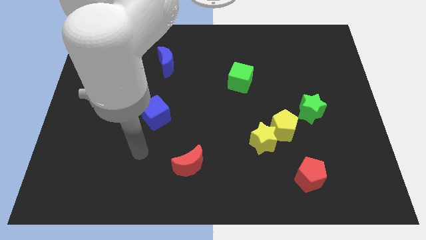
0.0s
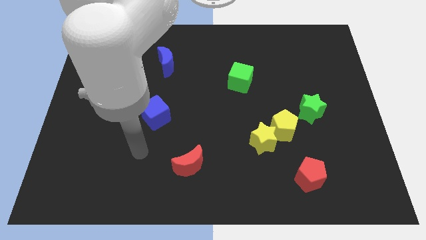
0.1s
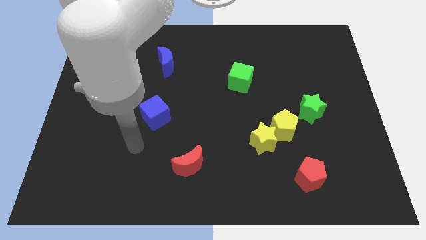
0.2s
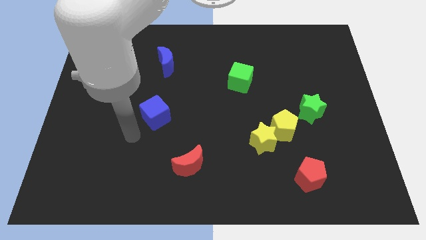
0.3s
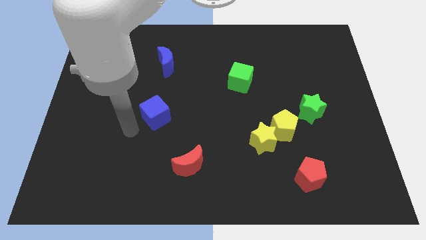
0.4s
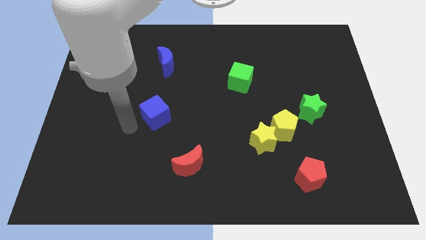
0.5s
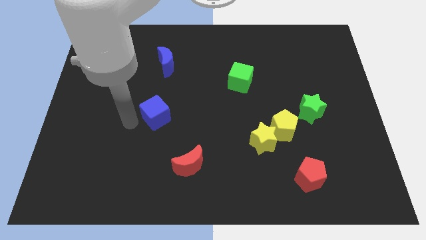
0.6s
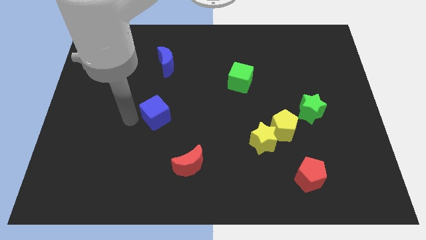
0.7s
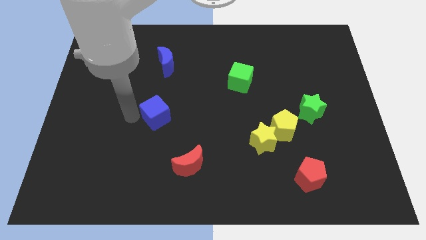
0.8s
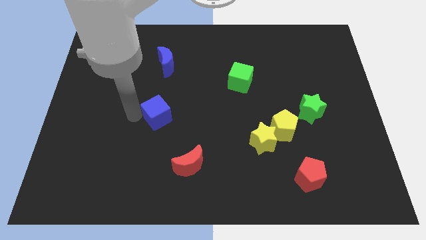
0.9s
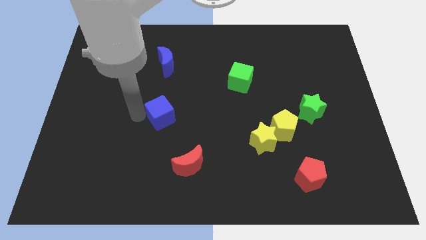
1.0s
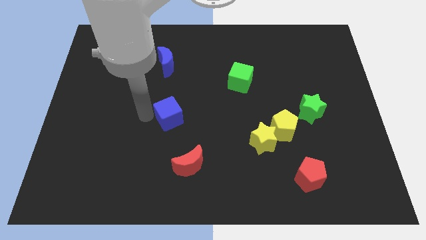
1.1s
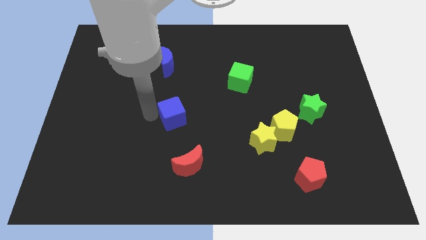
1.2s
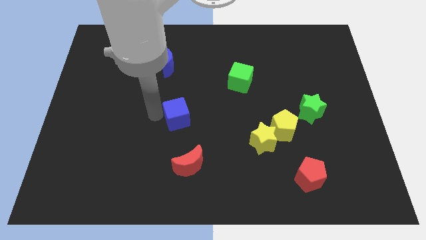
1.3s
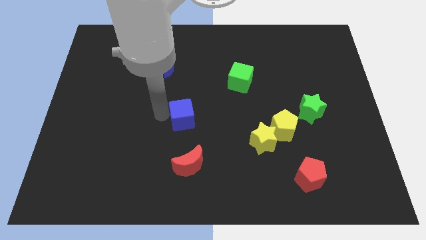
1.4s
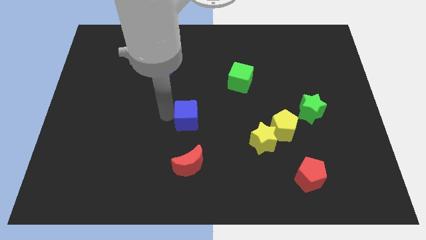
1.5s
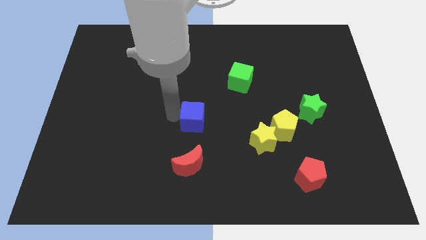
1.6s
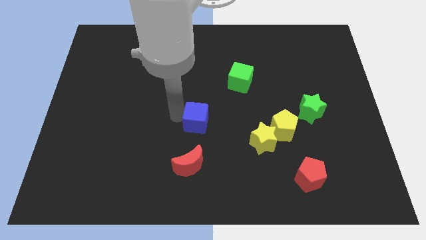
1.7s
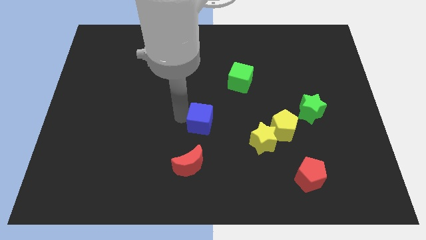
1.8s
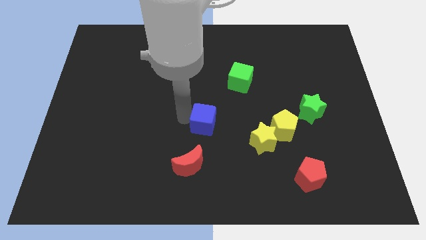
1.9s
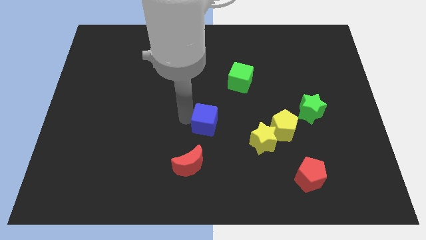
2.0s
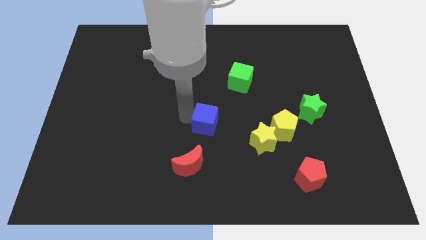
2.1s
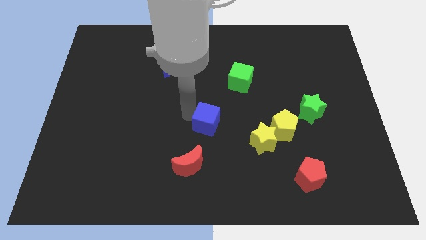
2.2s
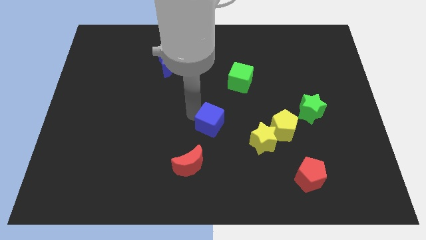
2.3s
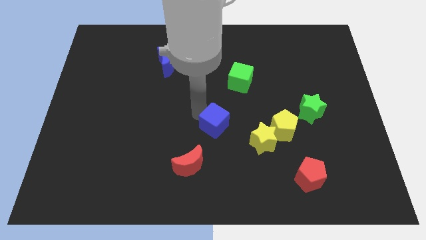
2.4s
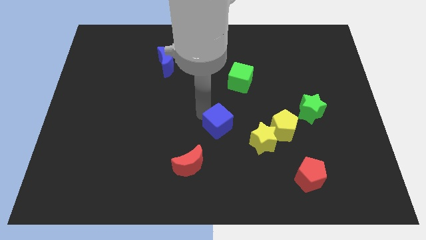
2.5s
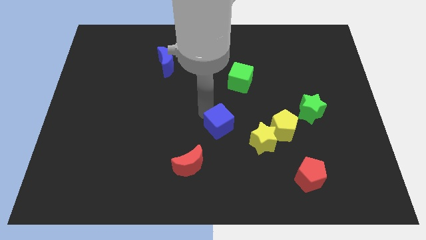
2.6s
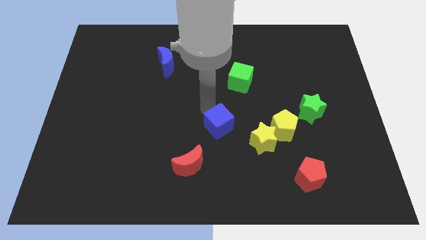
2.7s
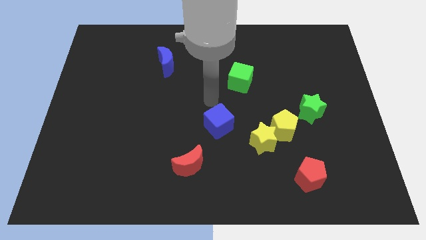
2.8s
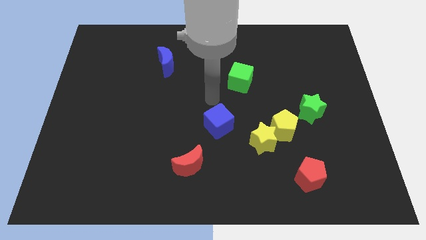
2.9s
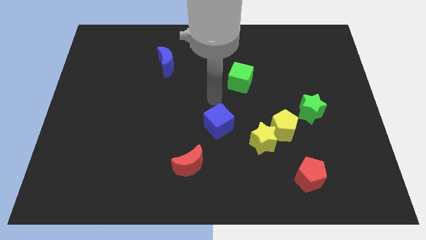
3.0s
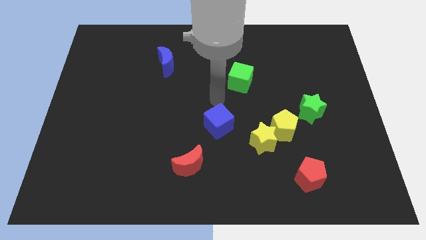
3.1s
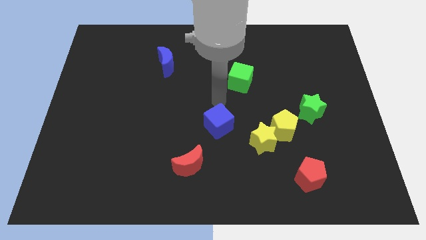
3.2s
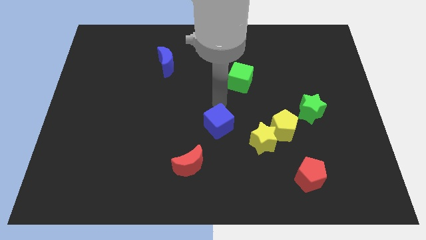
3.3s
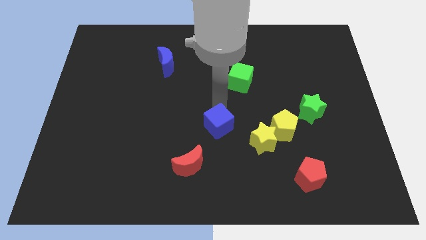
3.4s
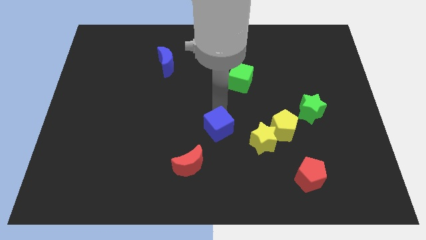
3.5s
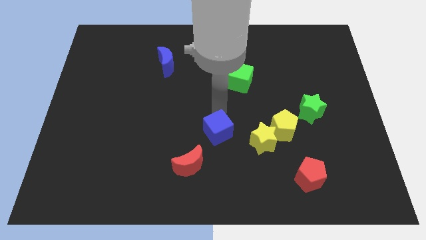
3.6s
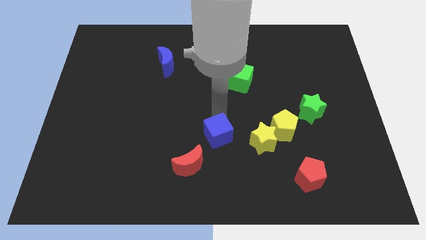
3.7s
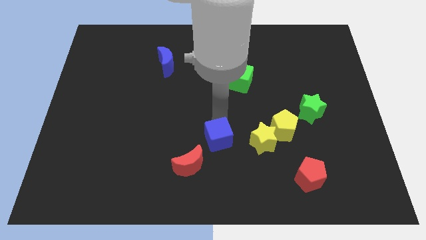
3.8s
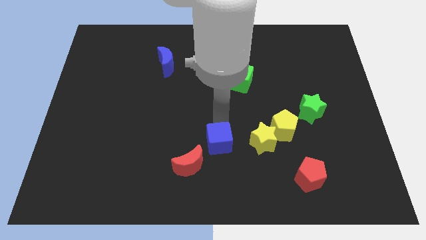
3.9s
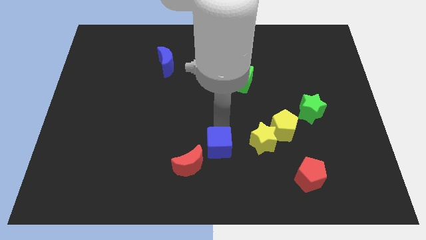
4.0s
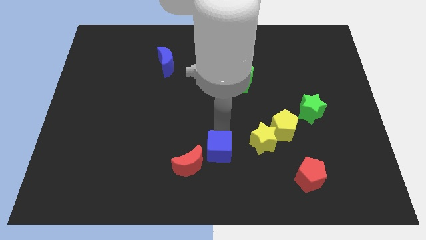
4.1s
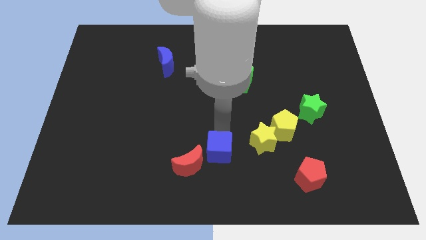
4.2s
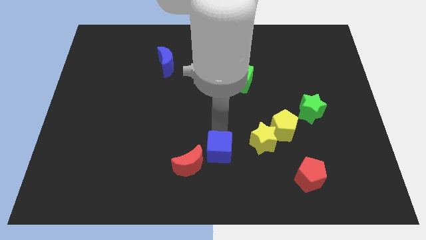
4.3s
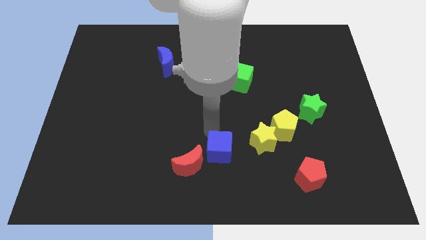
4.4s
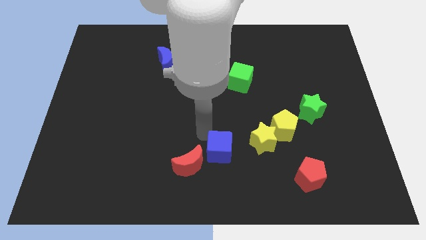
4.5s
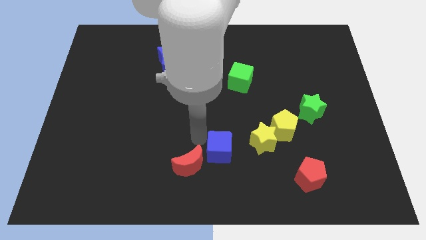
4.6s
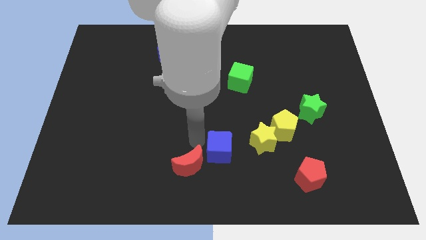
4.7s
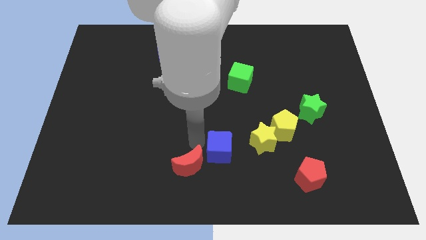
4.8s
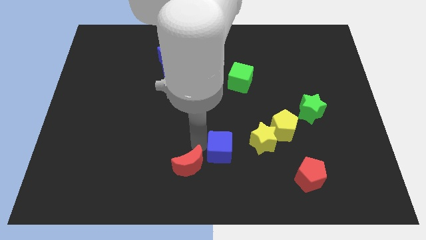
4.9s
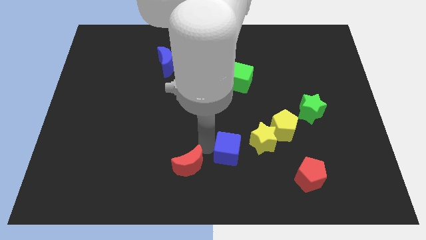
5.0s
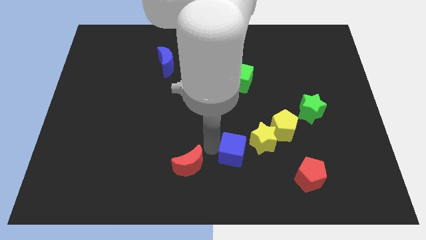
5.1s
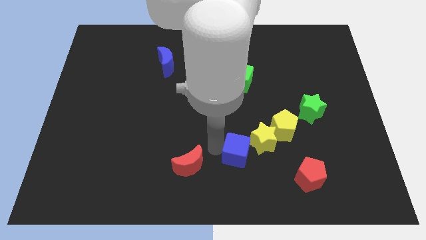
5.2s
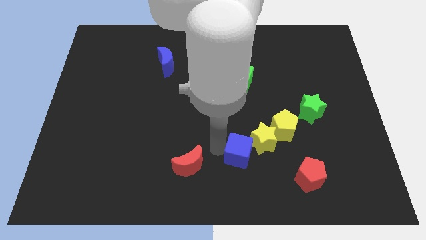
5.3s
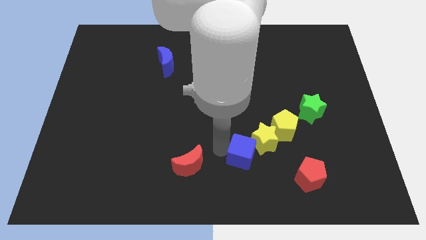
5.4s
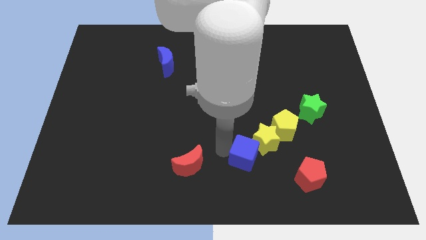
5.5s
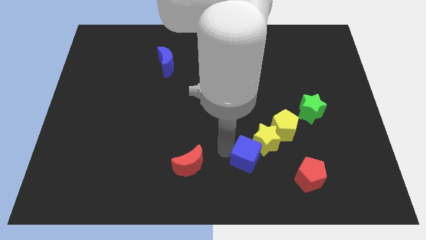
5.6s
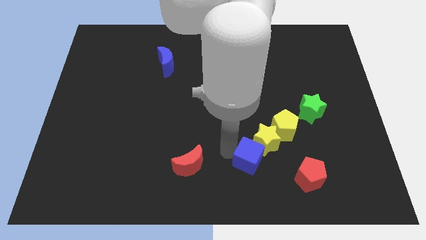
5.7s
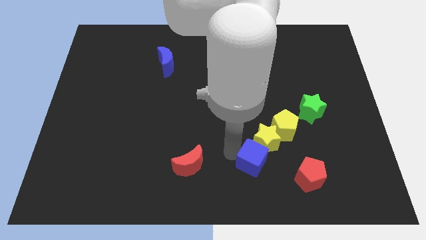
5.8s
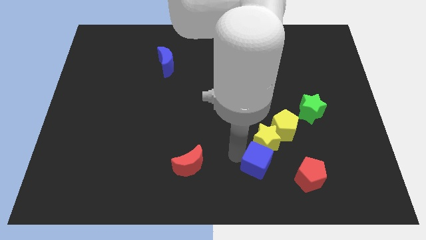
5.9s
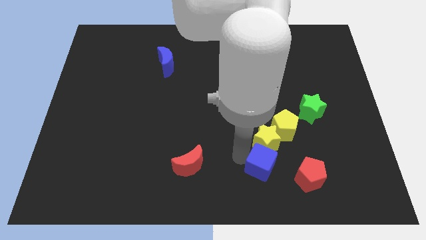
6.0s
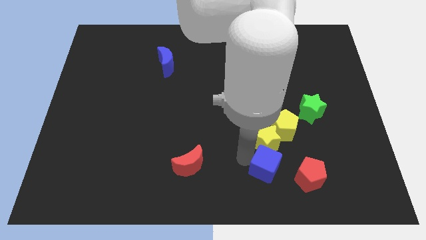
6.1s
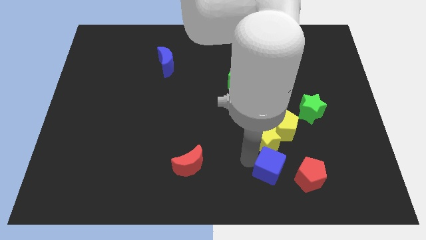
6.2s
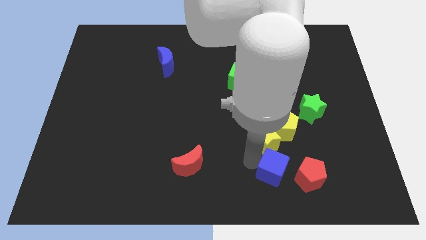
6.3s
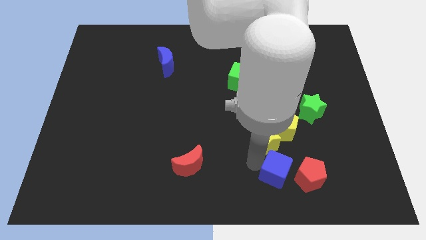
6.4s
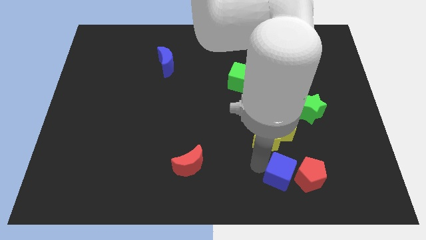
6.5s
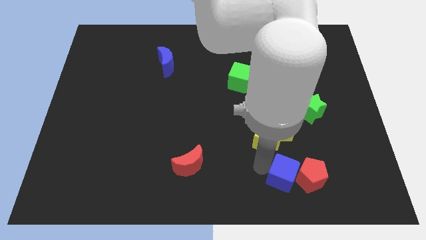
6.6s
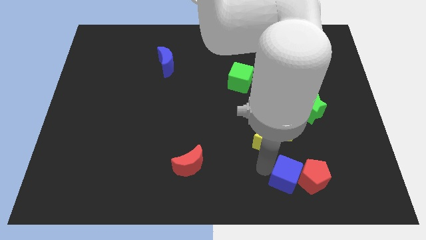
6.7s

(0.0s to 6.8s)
push the blue cube to the red pentagon

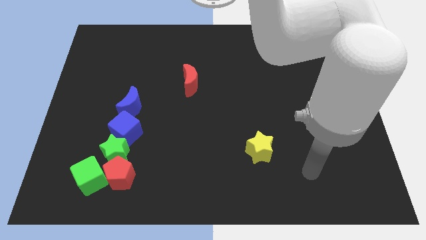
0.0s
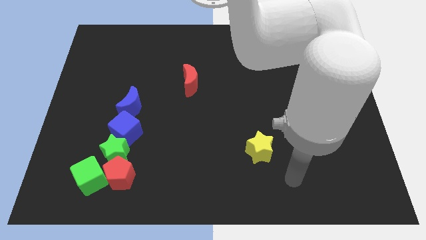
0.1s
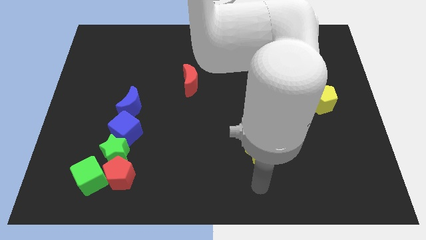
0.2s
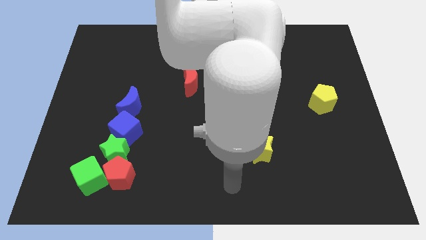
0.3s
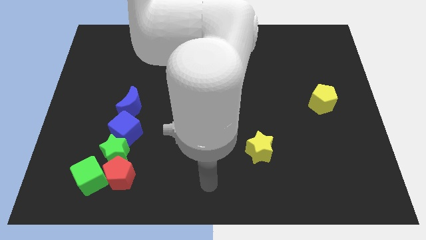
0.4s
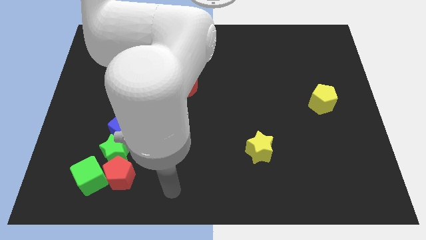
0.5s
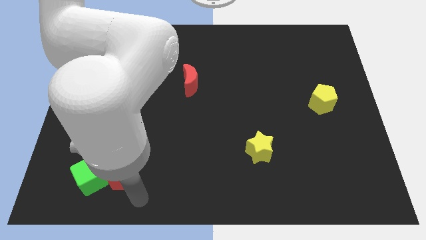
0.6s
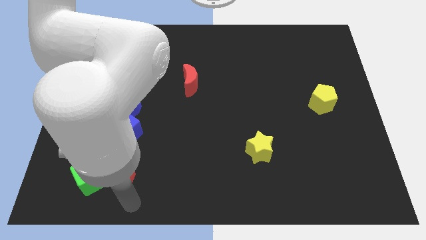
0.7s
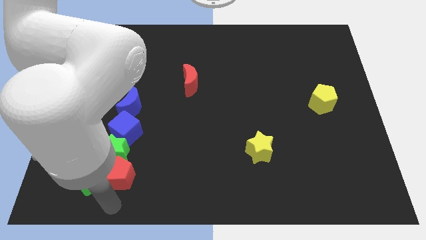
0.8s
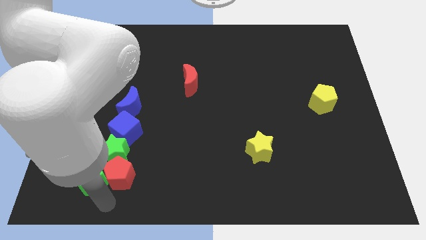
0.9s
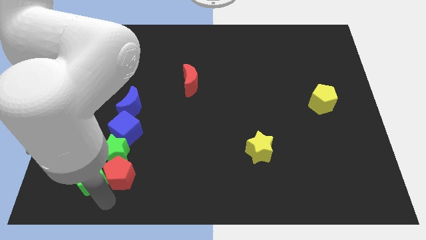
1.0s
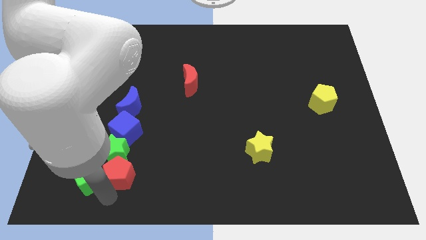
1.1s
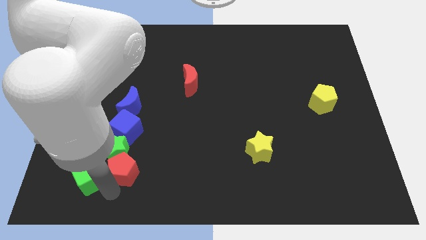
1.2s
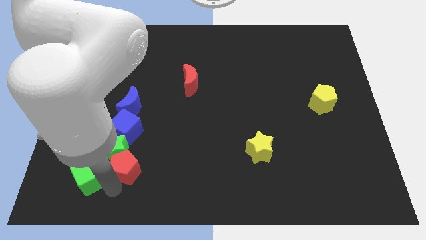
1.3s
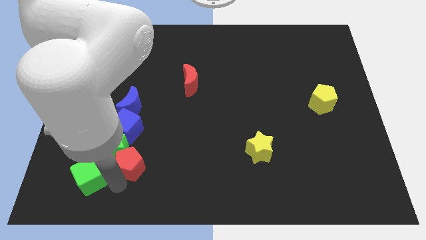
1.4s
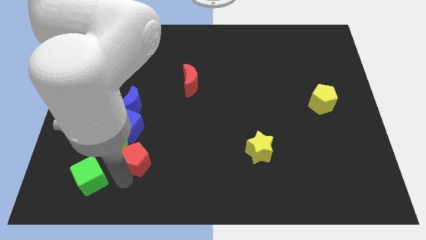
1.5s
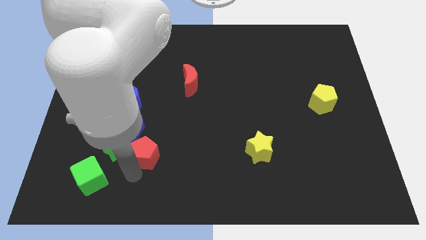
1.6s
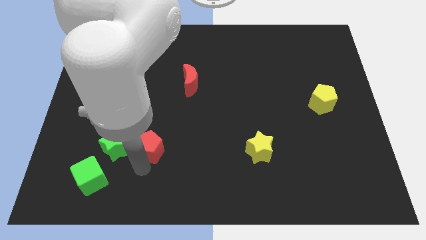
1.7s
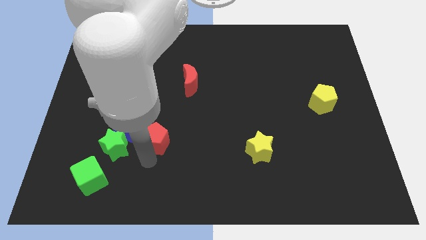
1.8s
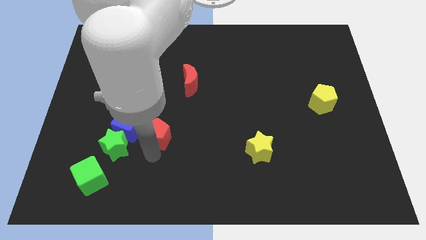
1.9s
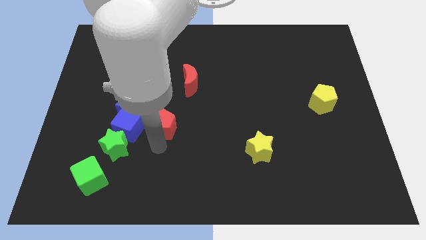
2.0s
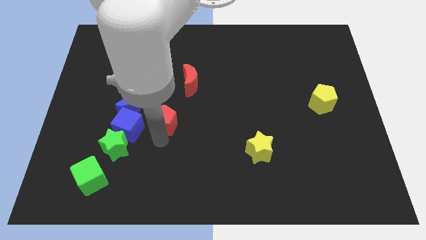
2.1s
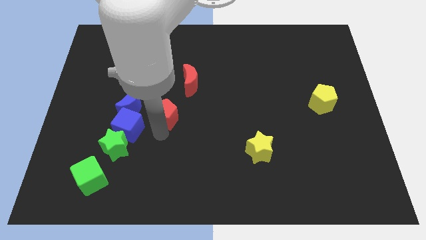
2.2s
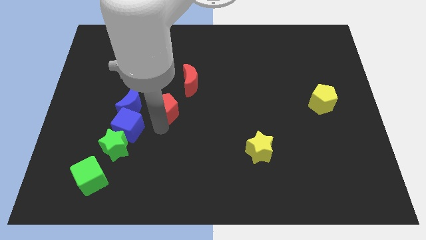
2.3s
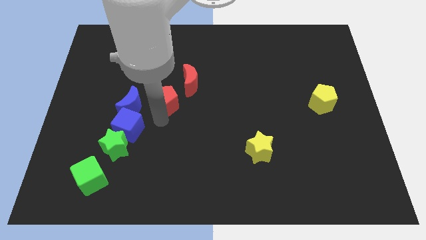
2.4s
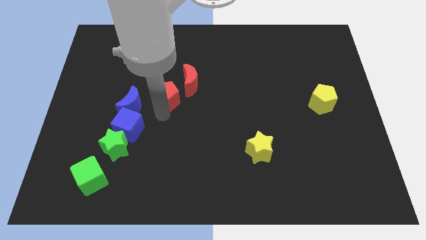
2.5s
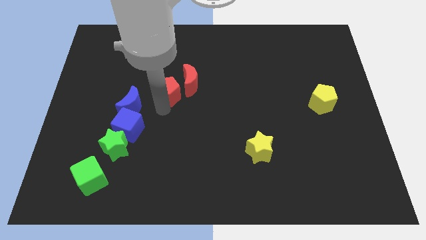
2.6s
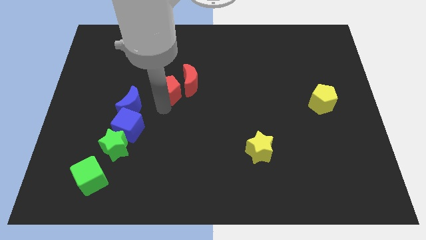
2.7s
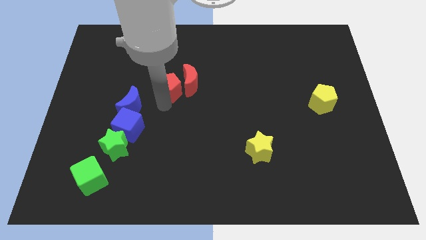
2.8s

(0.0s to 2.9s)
put the red pentagon towards the red moon
